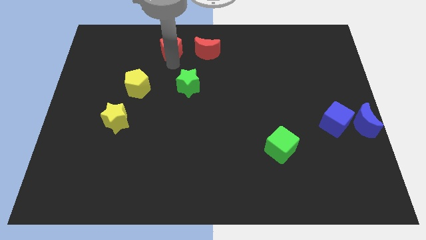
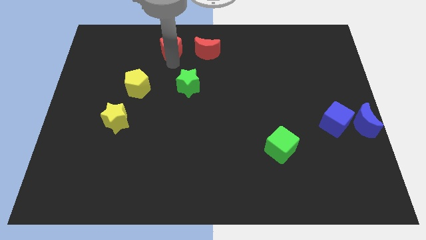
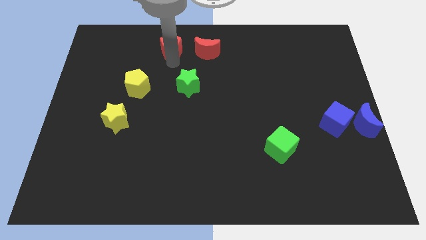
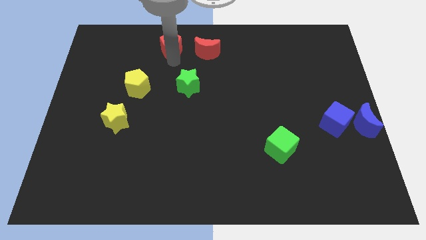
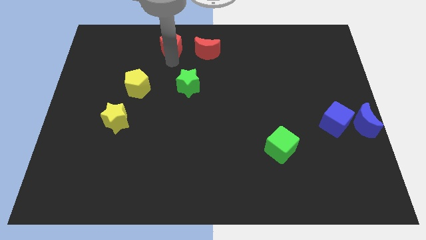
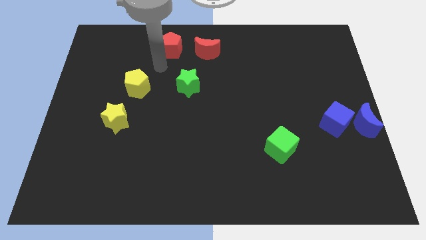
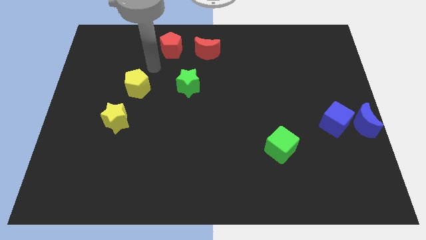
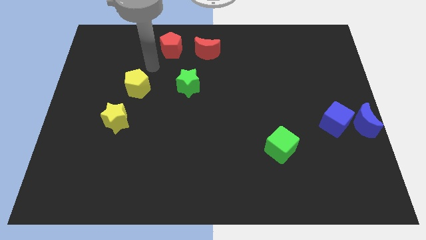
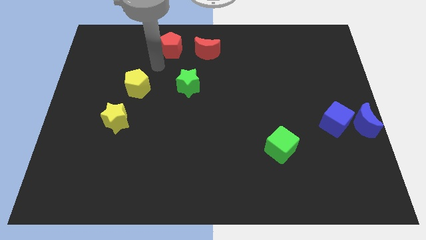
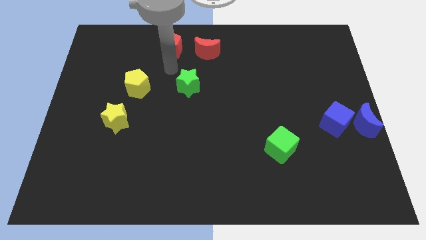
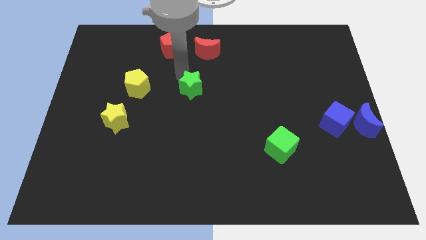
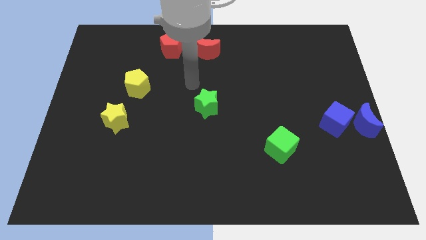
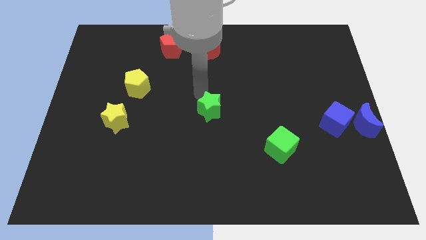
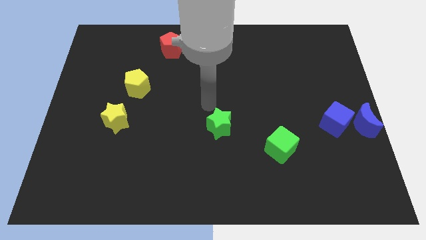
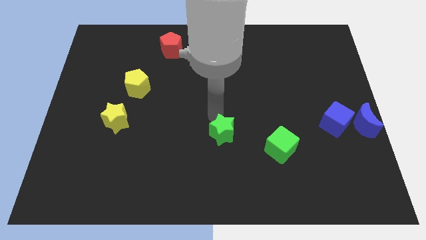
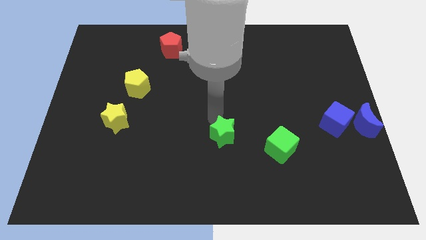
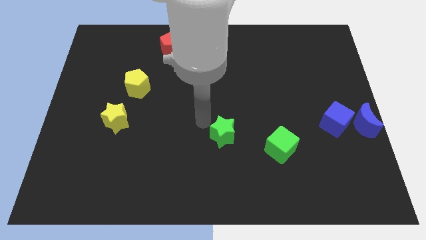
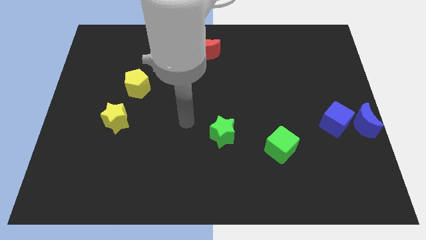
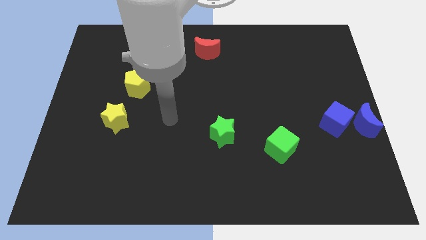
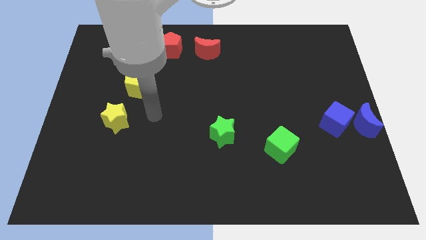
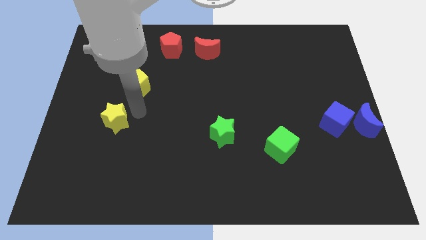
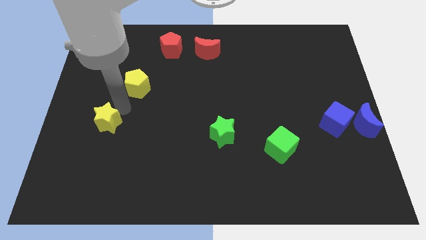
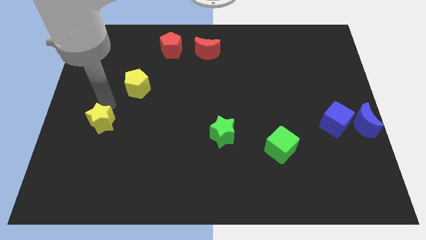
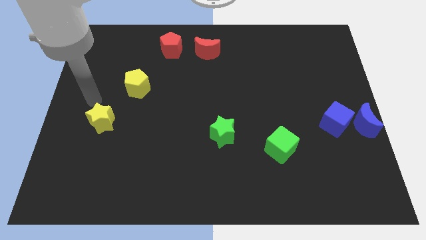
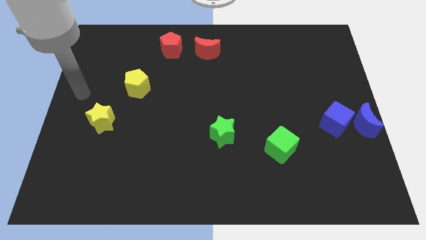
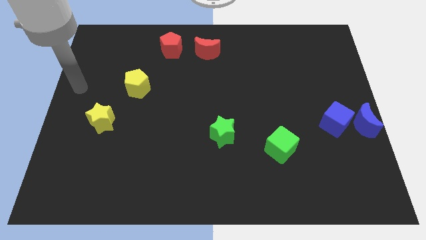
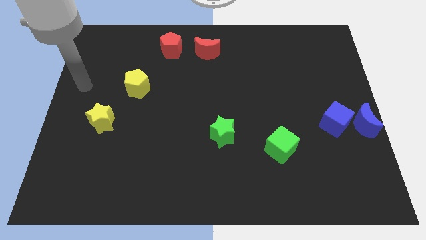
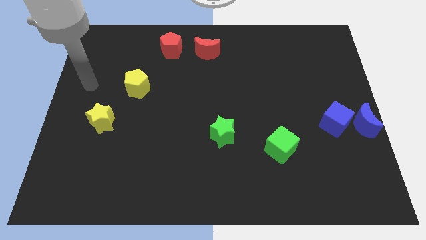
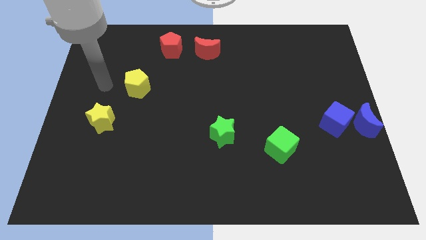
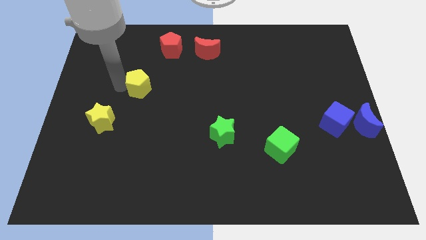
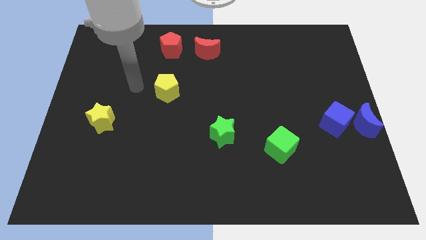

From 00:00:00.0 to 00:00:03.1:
move the green star towards the bottom side

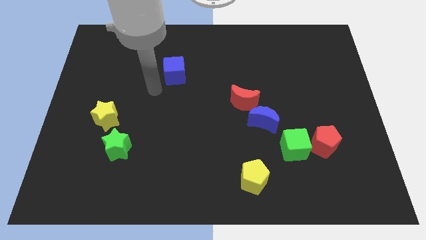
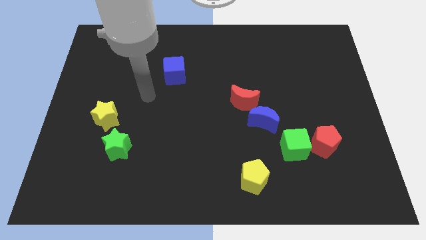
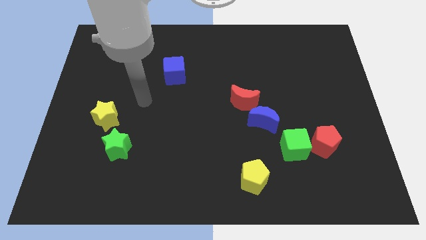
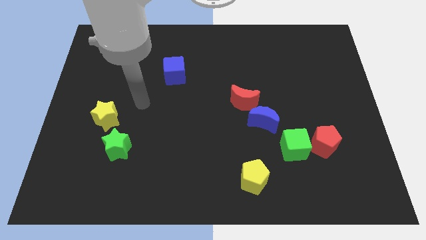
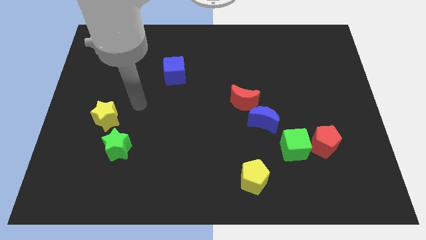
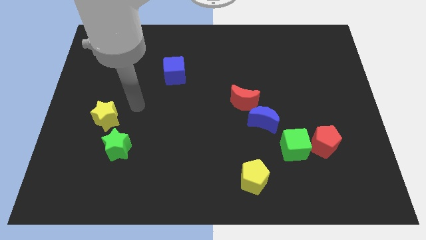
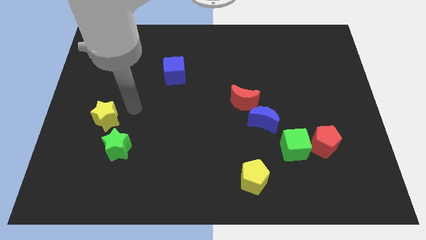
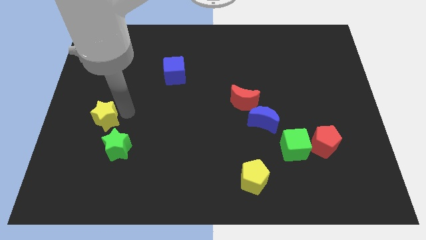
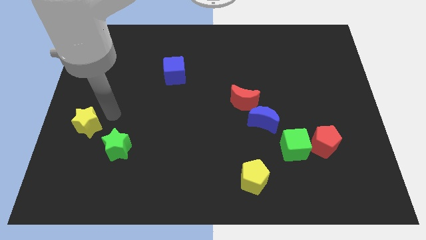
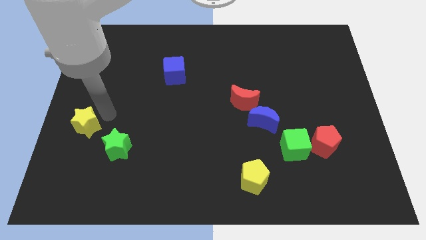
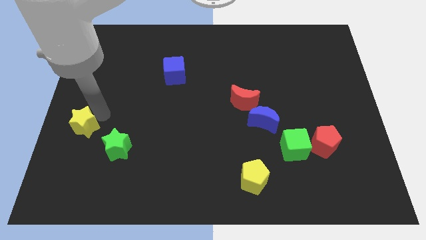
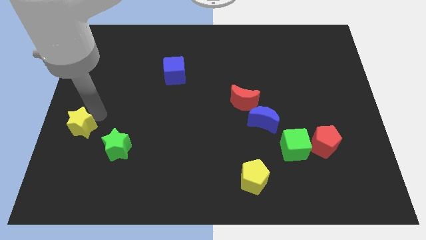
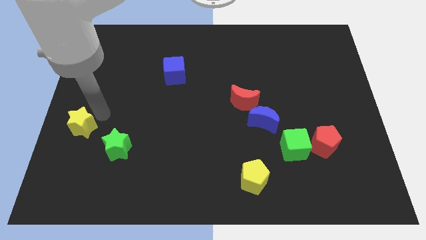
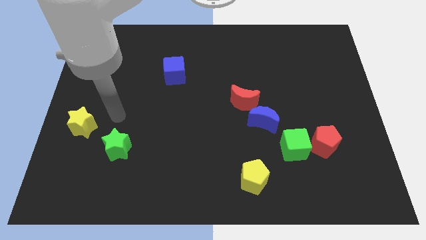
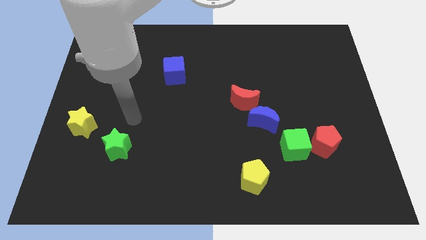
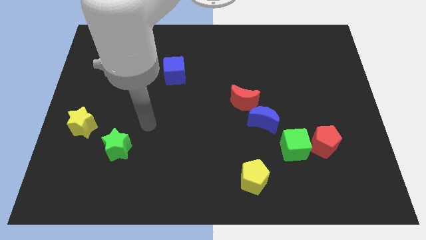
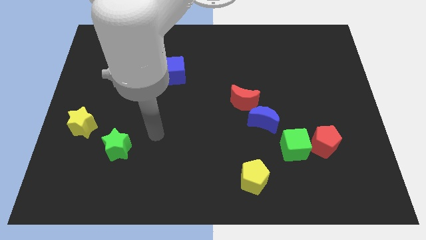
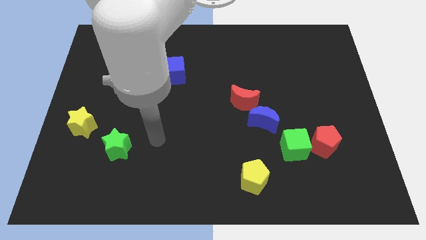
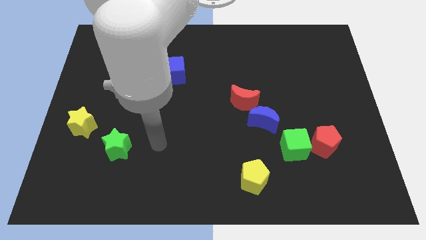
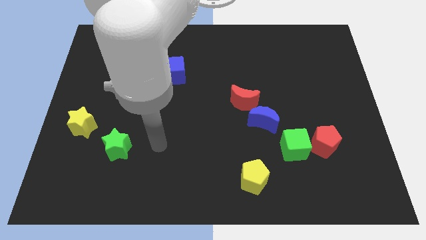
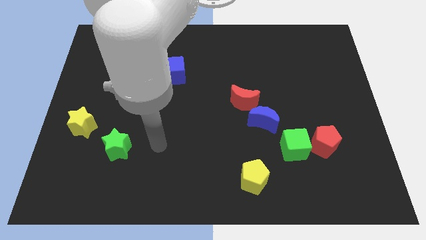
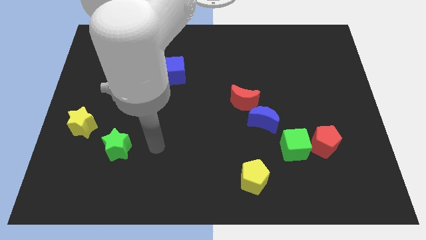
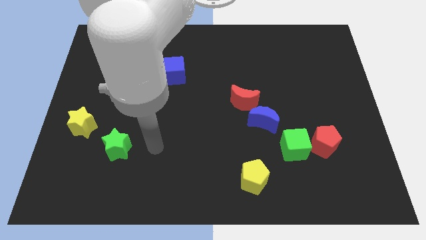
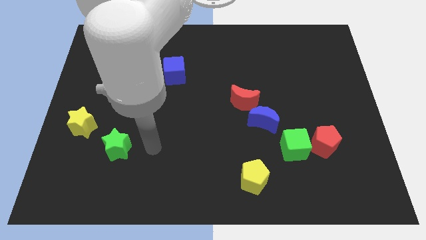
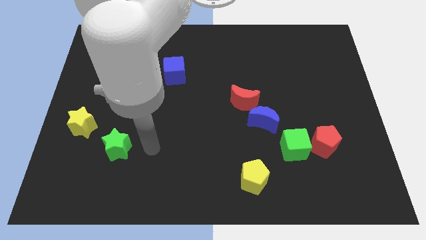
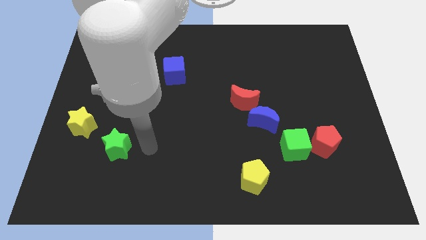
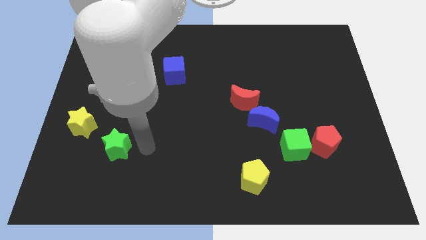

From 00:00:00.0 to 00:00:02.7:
move yellow star slightly left

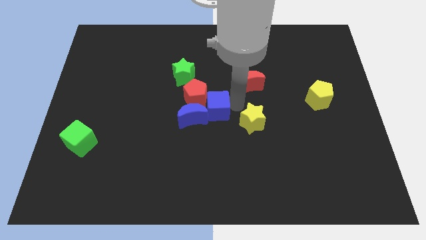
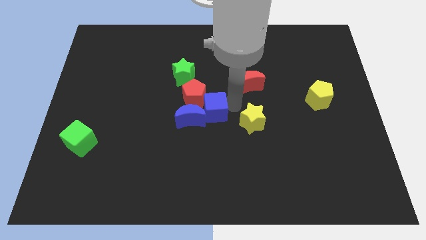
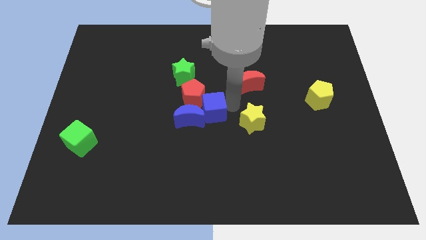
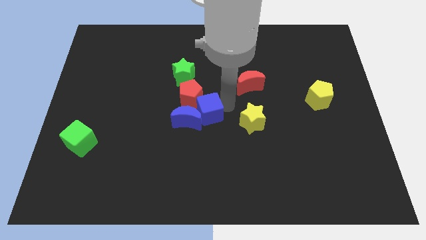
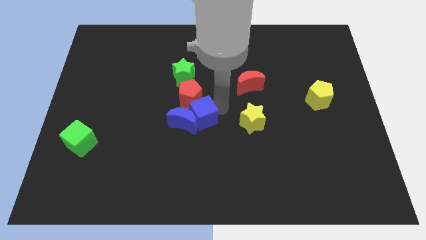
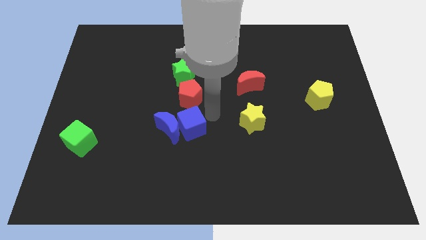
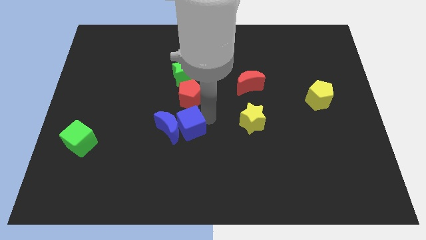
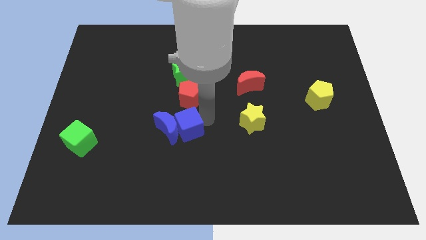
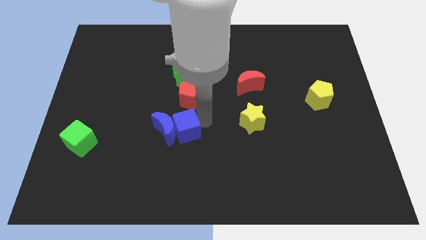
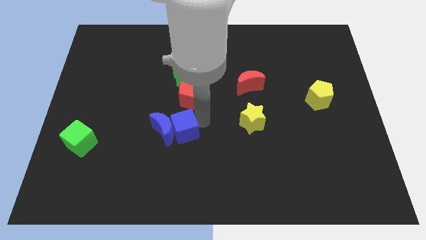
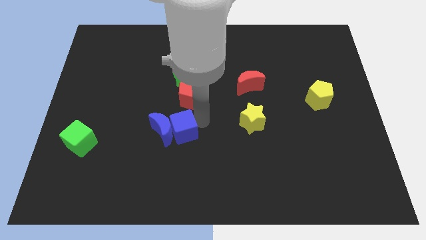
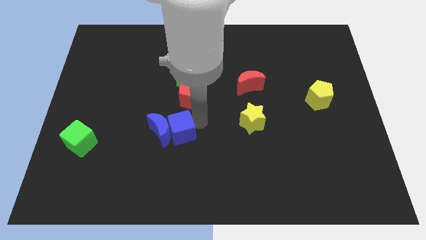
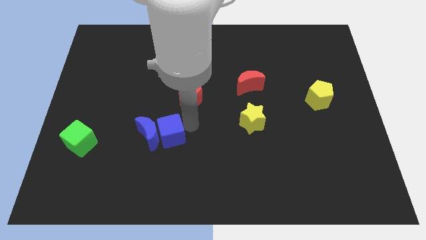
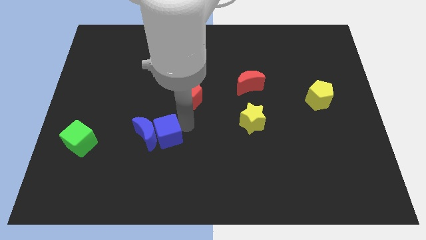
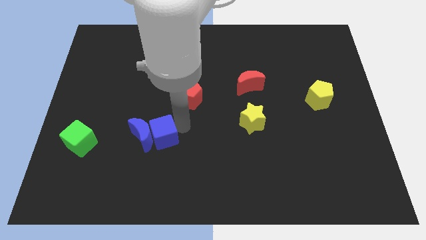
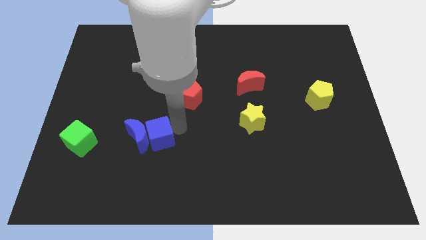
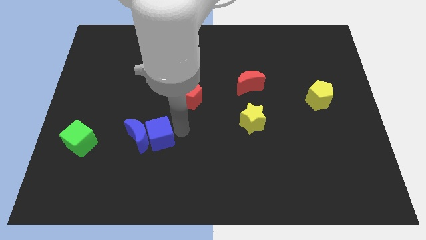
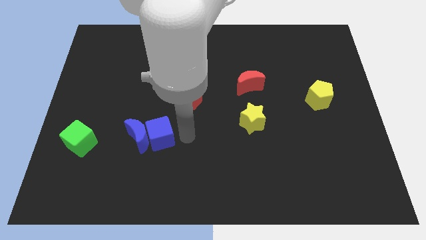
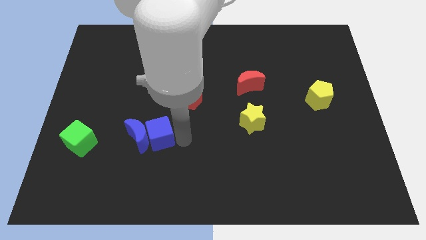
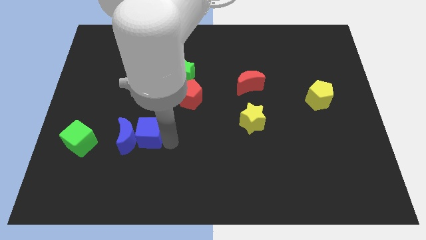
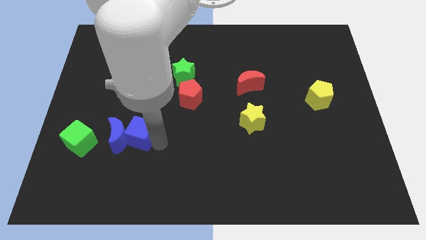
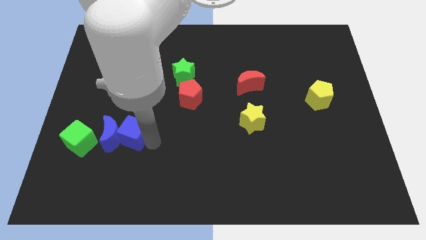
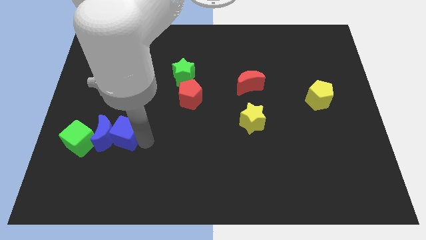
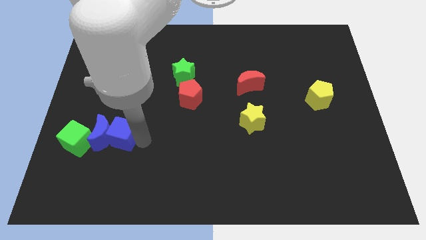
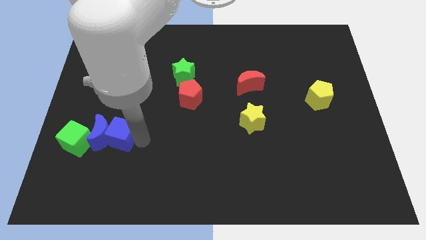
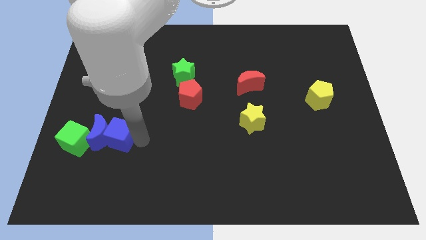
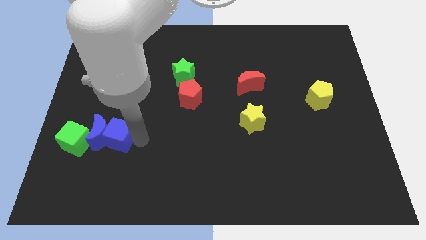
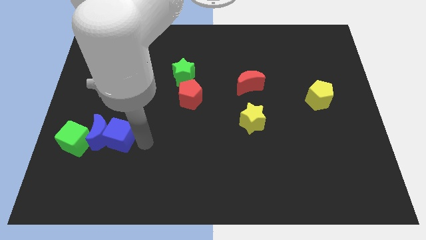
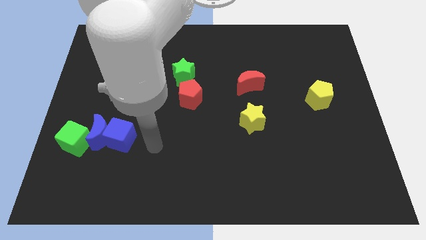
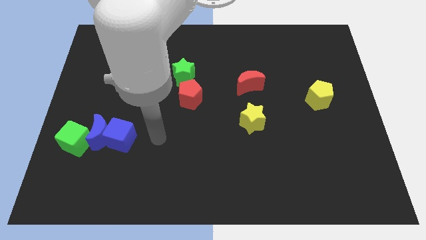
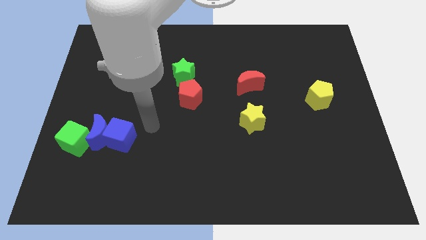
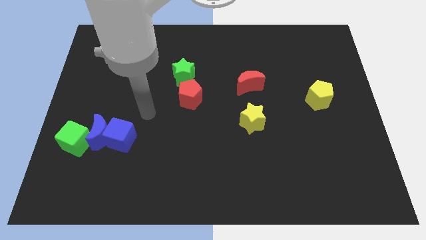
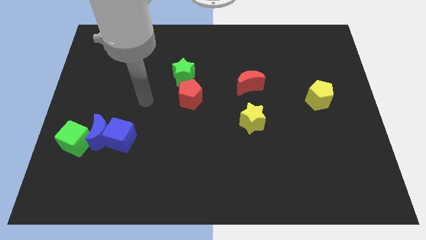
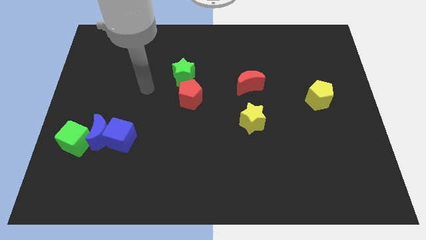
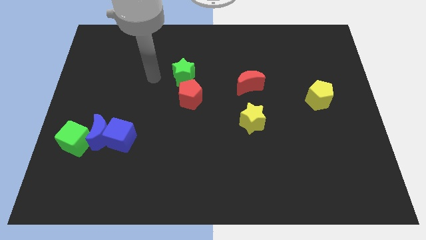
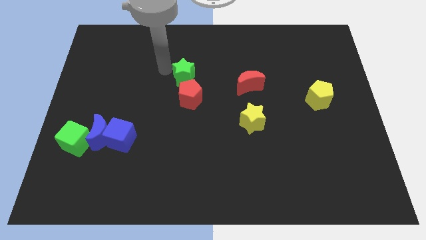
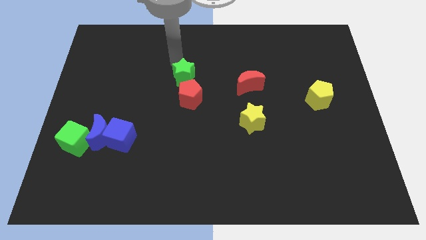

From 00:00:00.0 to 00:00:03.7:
push the blue moon with a blue cube to the right of the green cube
